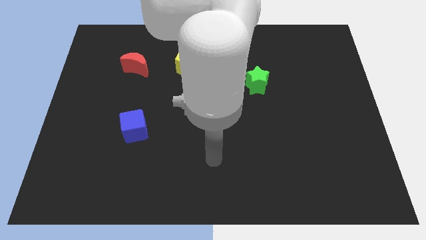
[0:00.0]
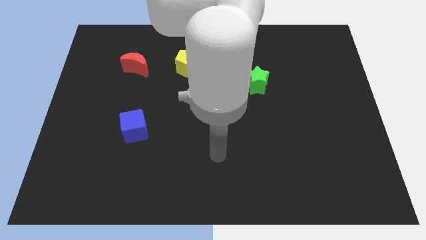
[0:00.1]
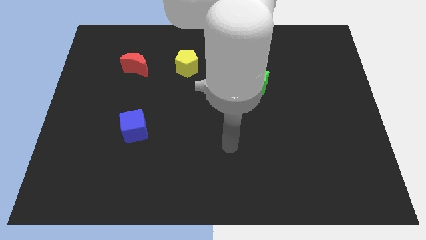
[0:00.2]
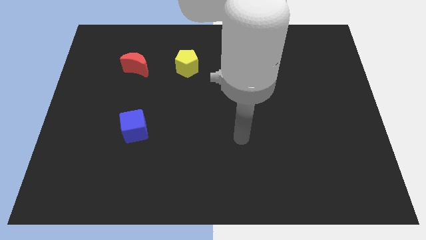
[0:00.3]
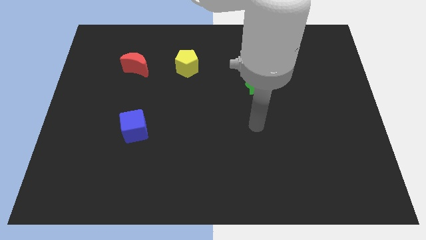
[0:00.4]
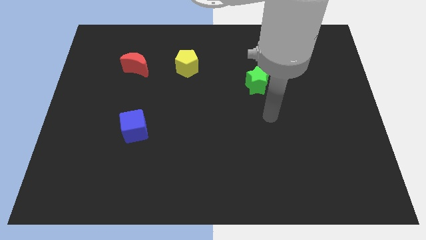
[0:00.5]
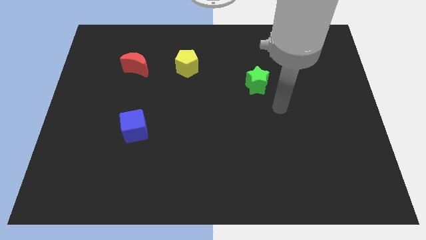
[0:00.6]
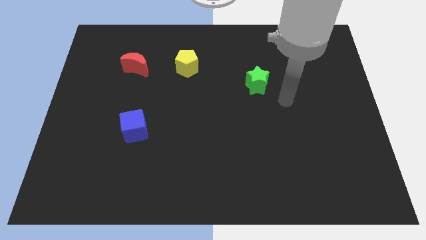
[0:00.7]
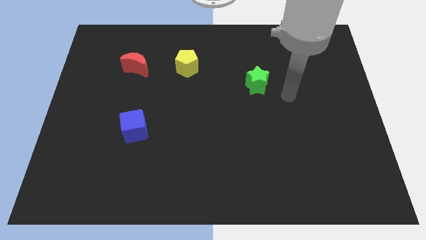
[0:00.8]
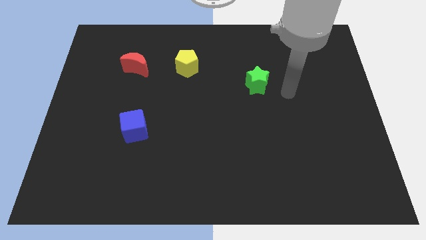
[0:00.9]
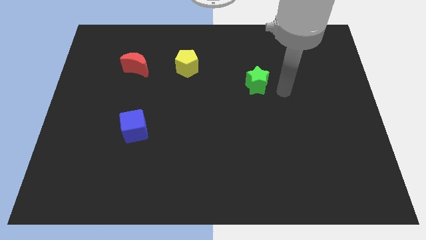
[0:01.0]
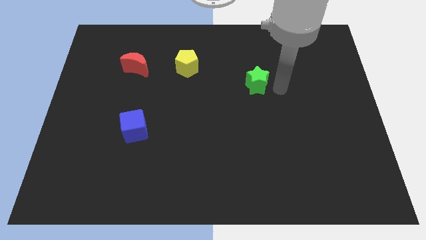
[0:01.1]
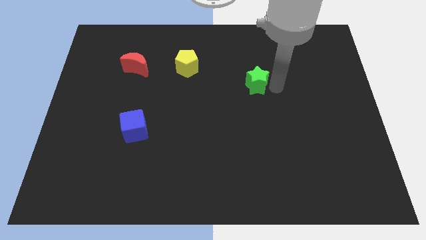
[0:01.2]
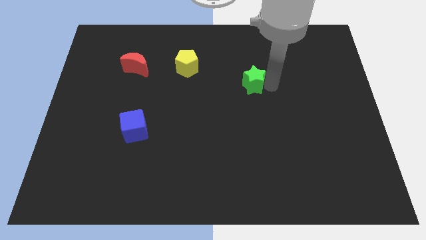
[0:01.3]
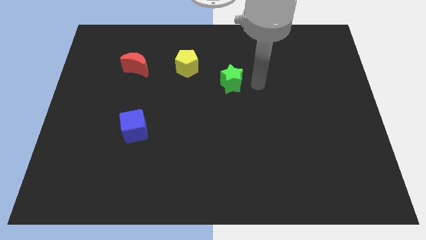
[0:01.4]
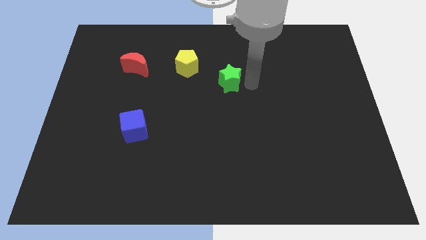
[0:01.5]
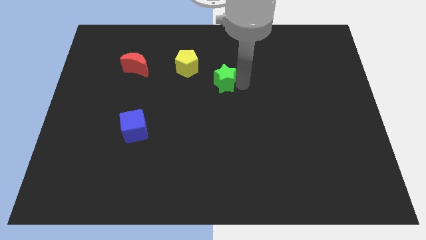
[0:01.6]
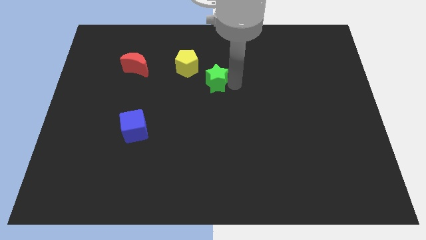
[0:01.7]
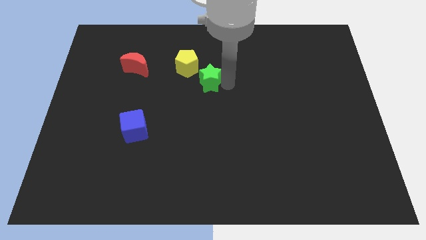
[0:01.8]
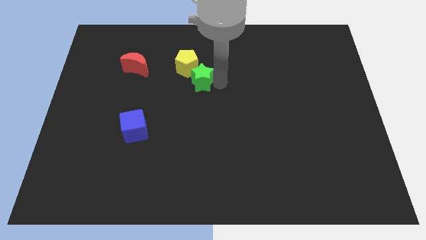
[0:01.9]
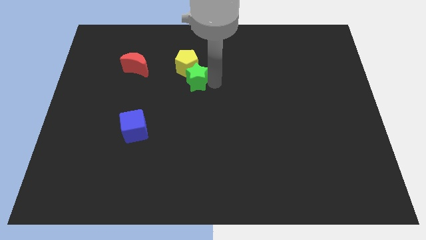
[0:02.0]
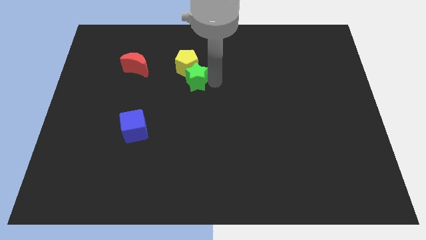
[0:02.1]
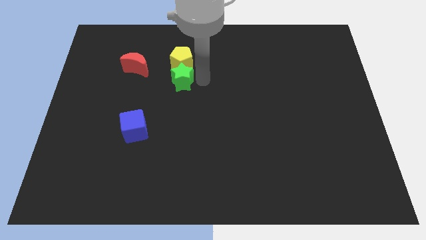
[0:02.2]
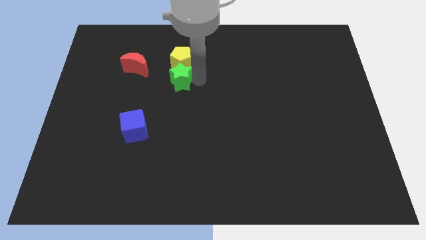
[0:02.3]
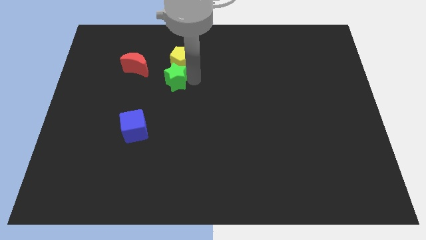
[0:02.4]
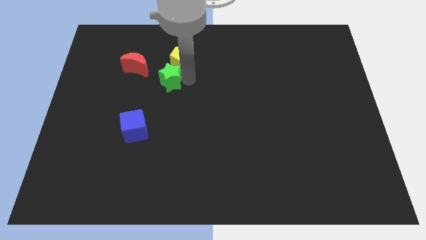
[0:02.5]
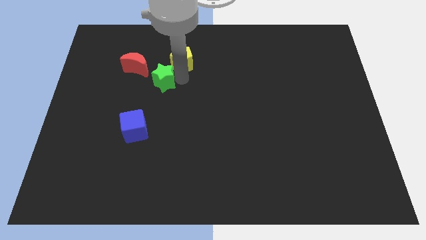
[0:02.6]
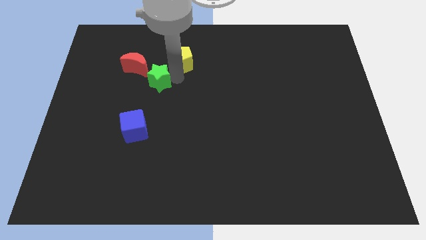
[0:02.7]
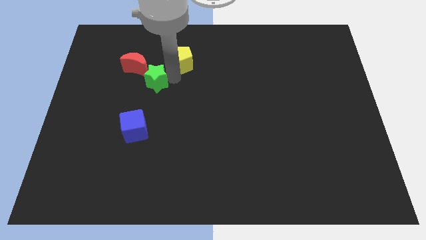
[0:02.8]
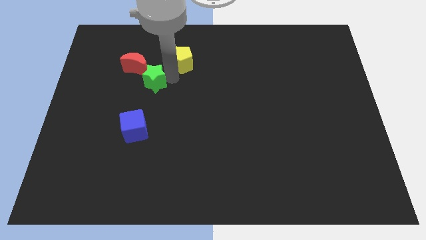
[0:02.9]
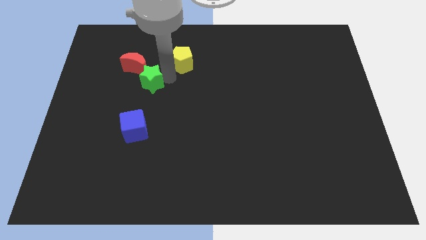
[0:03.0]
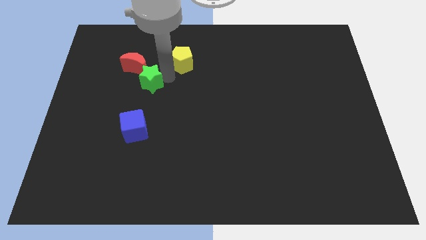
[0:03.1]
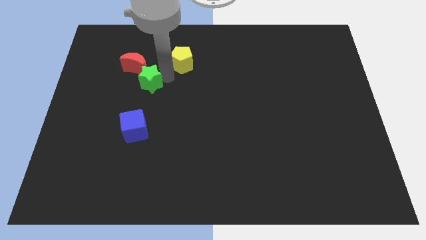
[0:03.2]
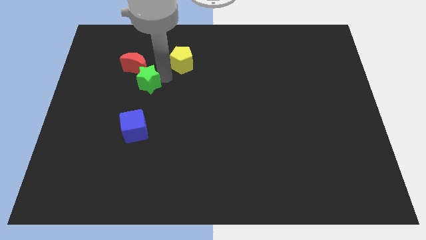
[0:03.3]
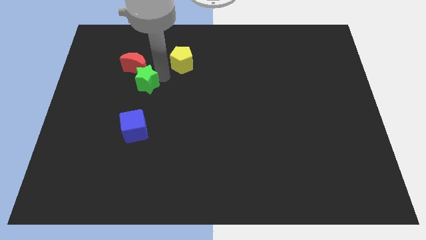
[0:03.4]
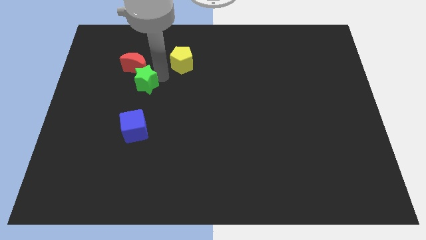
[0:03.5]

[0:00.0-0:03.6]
slide the green block towards the red moon

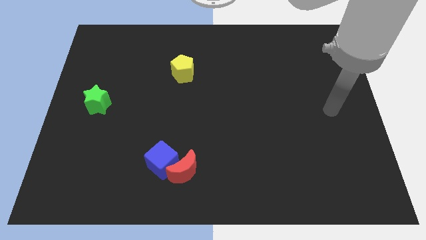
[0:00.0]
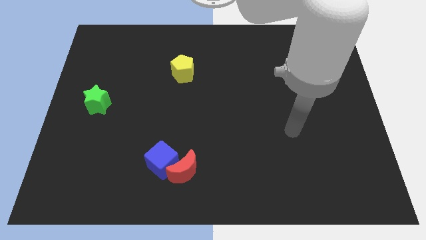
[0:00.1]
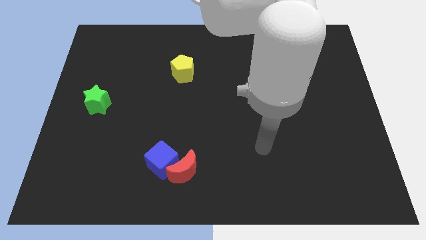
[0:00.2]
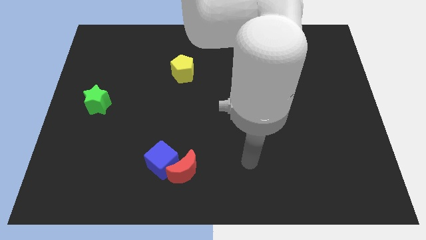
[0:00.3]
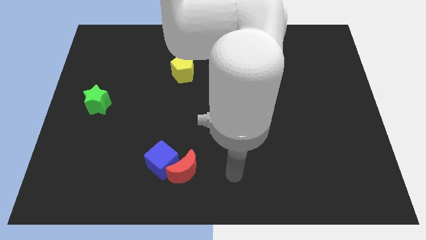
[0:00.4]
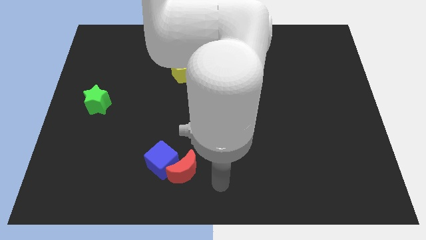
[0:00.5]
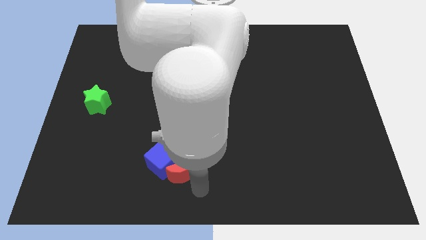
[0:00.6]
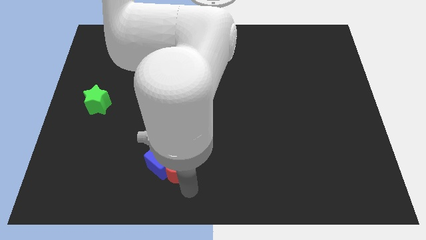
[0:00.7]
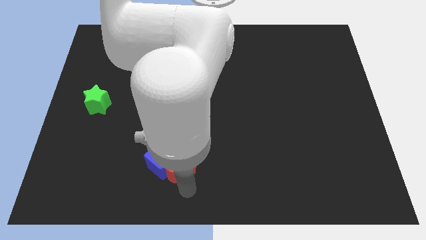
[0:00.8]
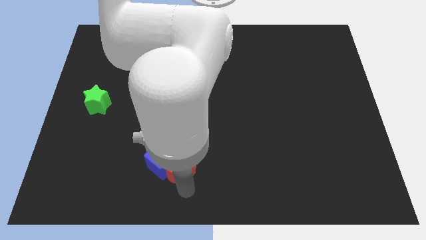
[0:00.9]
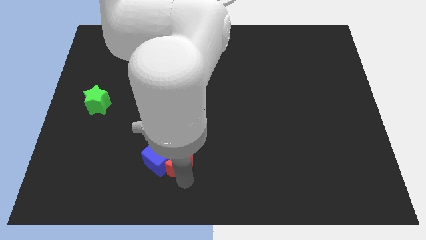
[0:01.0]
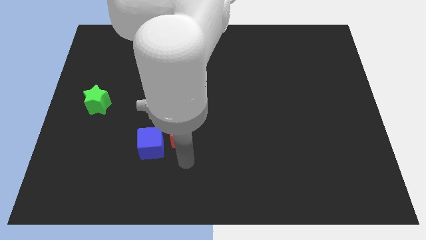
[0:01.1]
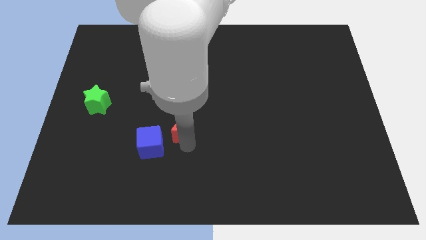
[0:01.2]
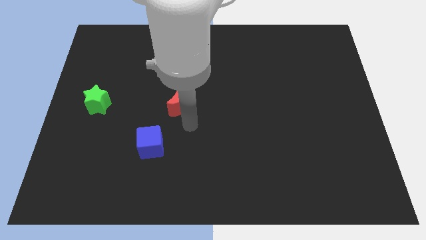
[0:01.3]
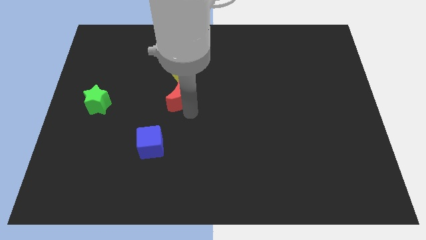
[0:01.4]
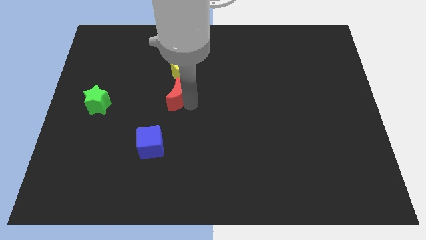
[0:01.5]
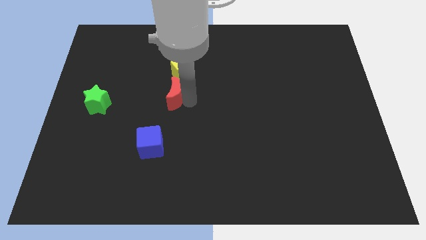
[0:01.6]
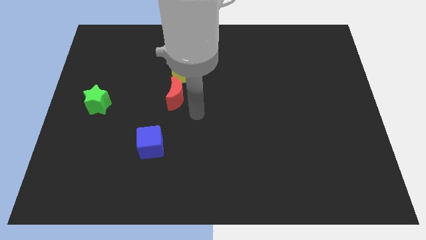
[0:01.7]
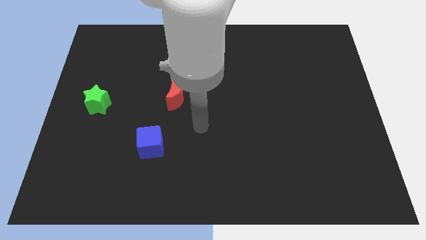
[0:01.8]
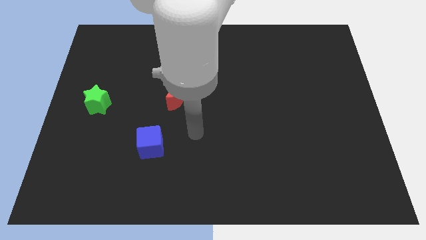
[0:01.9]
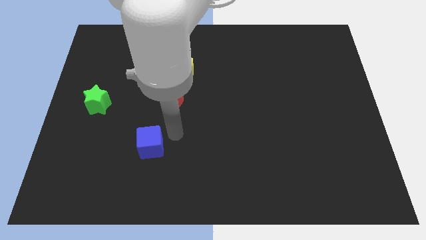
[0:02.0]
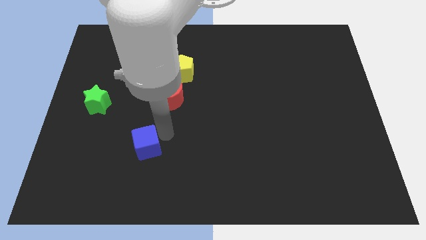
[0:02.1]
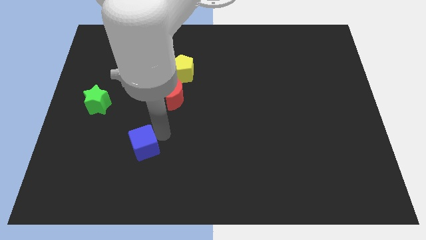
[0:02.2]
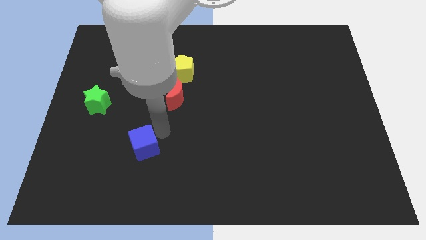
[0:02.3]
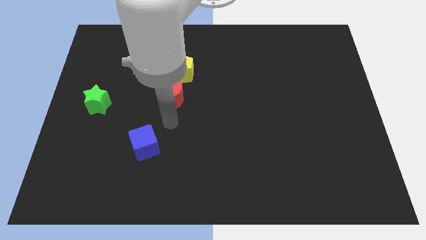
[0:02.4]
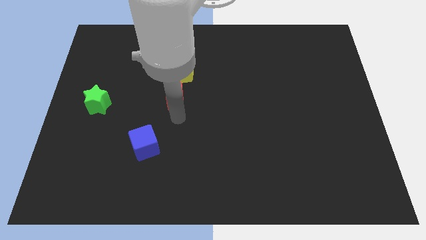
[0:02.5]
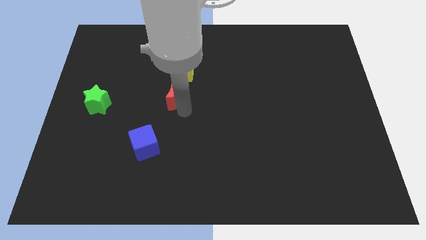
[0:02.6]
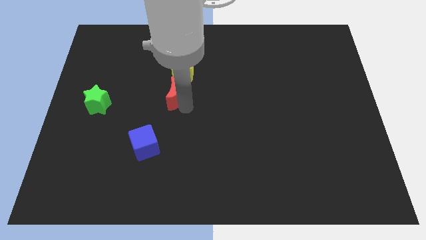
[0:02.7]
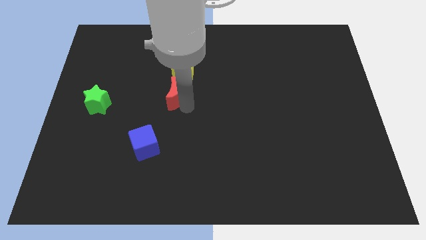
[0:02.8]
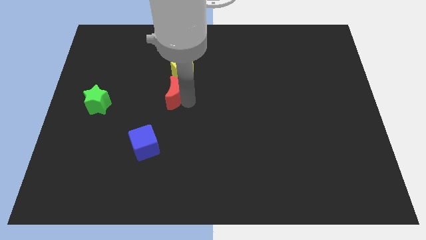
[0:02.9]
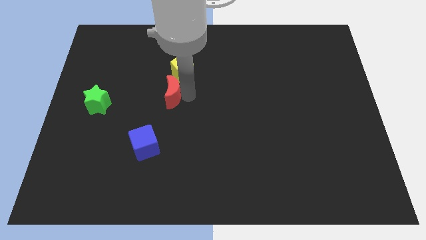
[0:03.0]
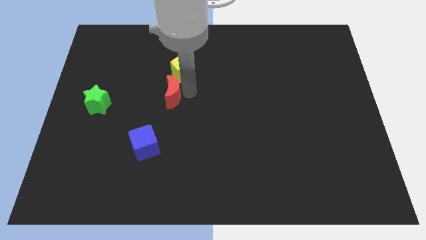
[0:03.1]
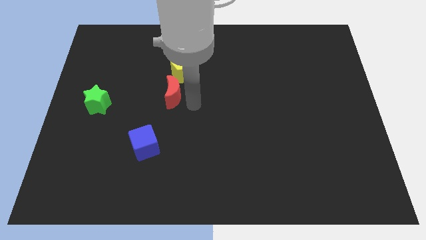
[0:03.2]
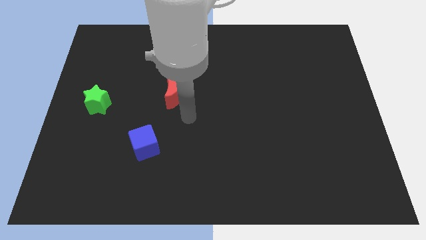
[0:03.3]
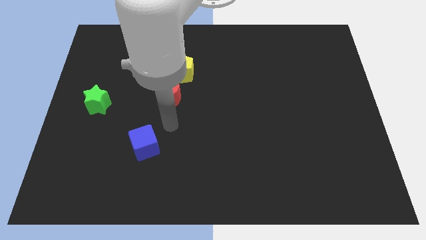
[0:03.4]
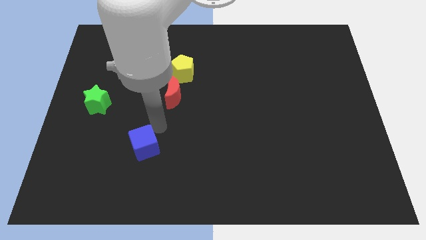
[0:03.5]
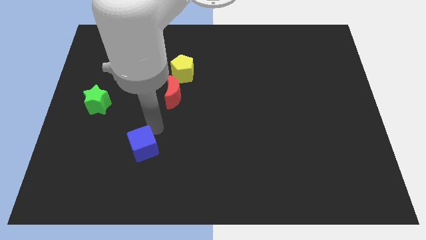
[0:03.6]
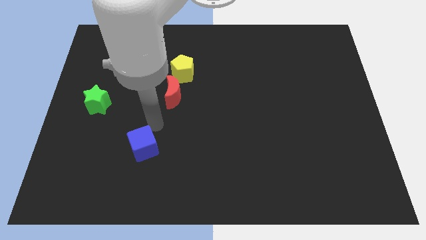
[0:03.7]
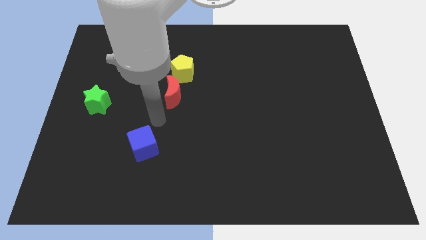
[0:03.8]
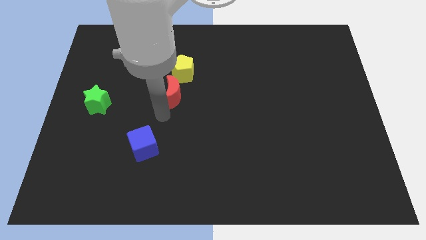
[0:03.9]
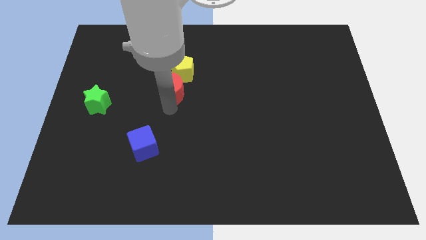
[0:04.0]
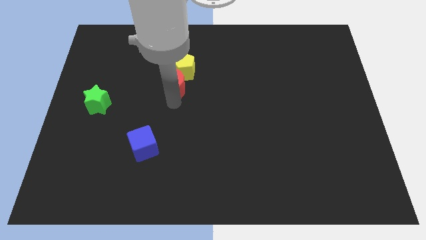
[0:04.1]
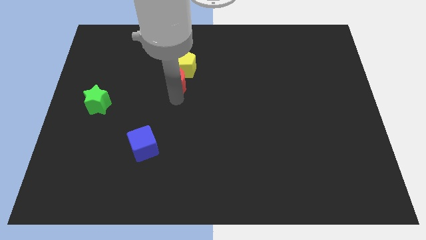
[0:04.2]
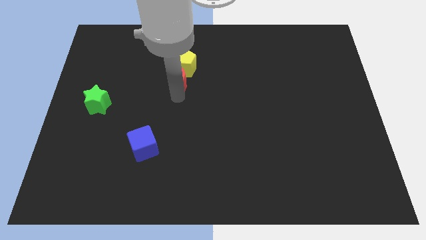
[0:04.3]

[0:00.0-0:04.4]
slide the red block to the pentagon

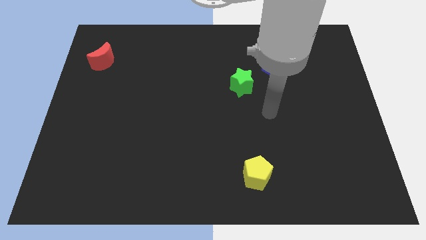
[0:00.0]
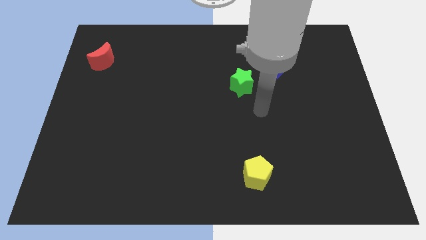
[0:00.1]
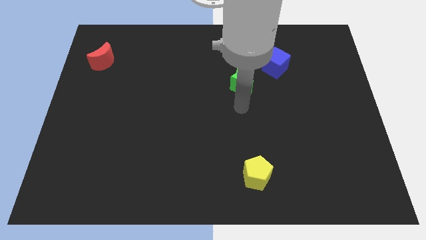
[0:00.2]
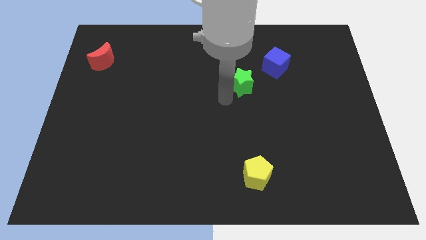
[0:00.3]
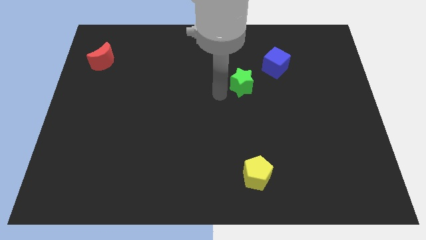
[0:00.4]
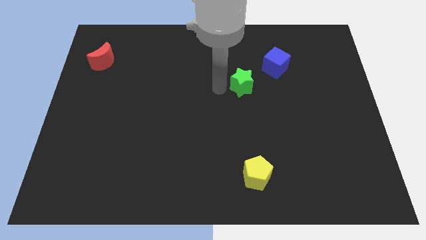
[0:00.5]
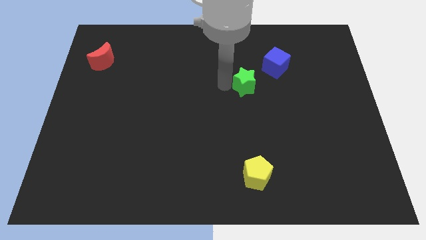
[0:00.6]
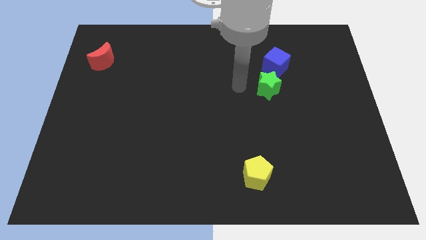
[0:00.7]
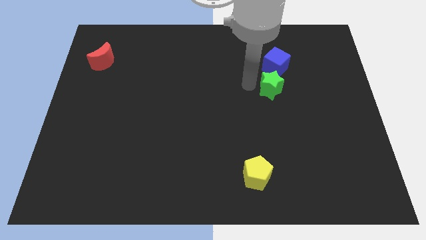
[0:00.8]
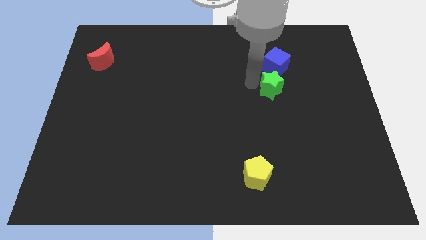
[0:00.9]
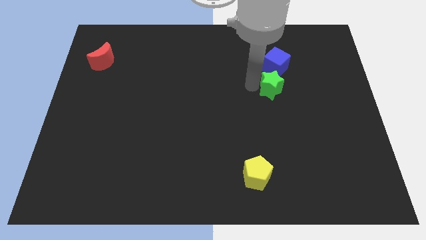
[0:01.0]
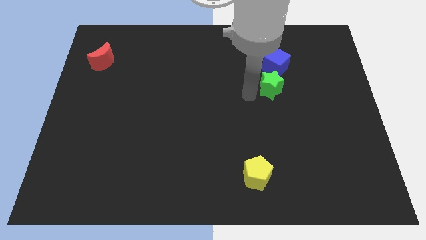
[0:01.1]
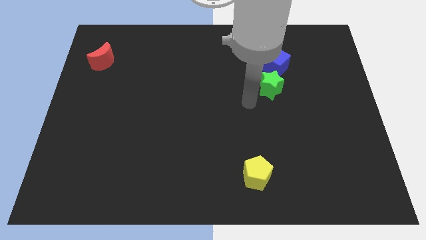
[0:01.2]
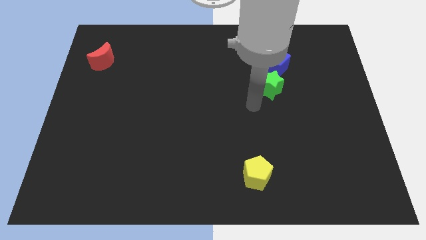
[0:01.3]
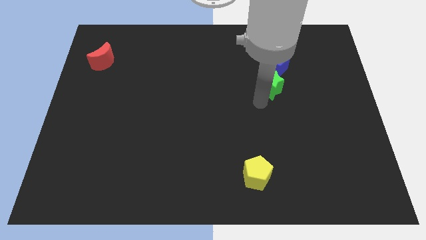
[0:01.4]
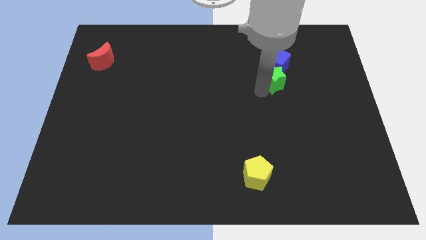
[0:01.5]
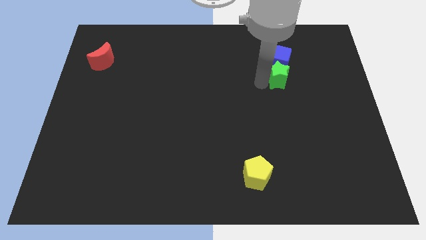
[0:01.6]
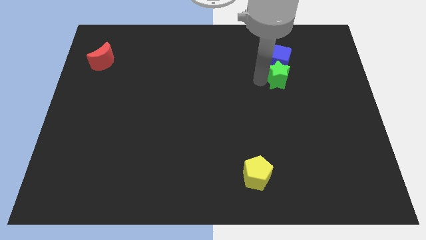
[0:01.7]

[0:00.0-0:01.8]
put the green star towards the cube
